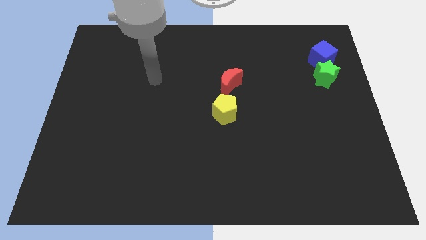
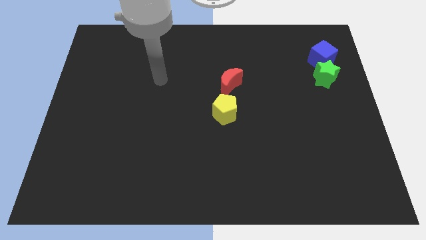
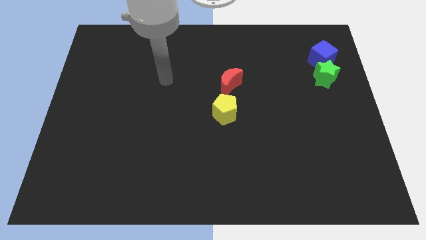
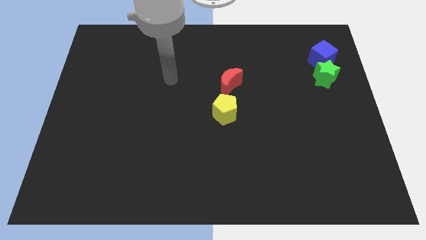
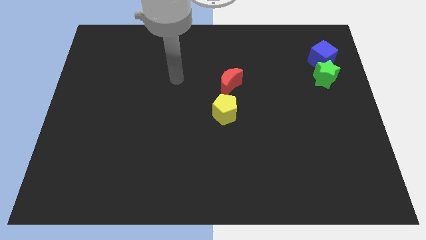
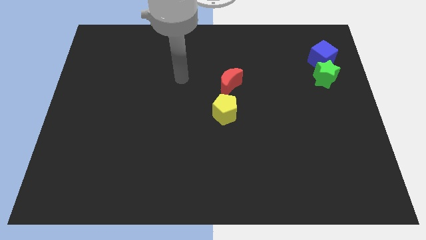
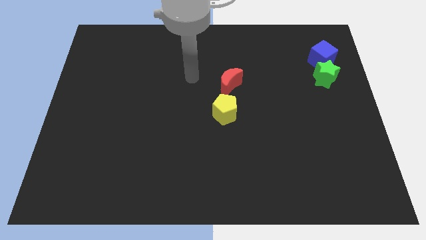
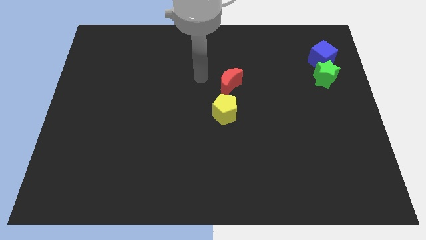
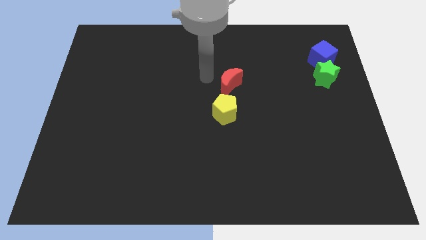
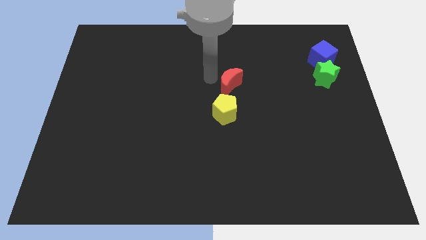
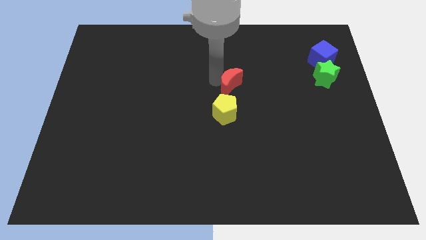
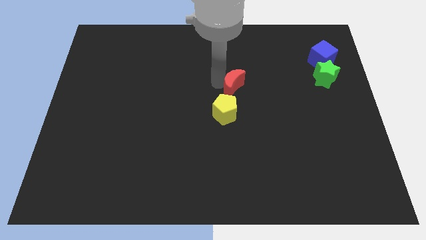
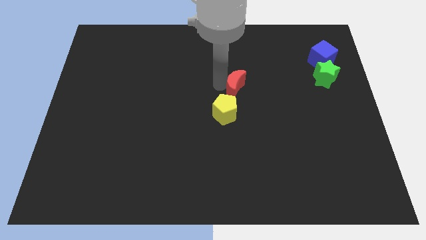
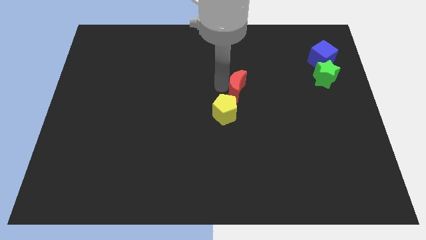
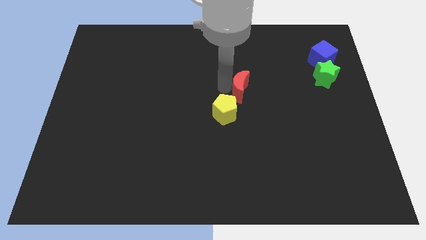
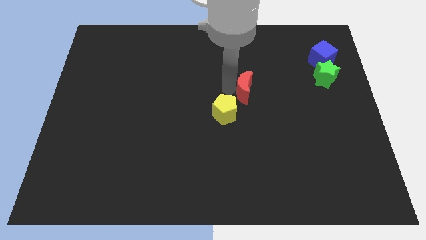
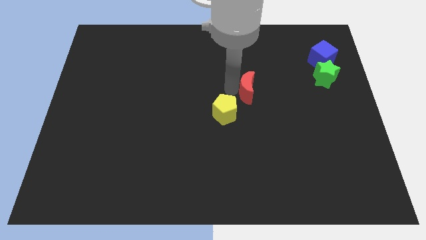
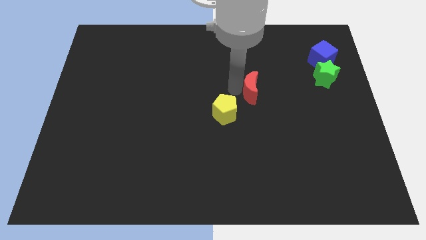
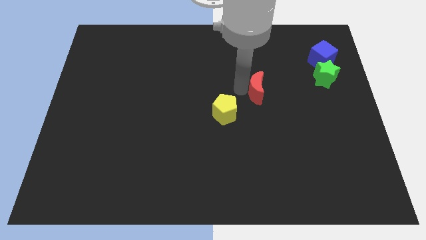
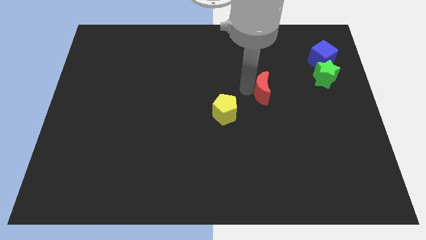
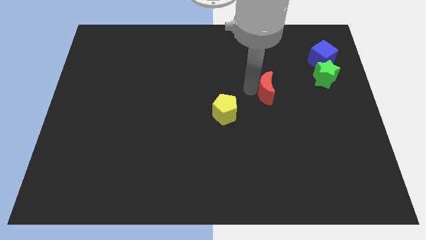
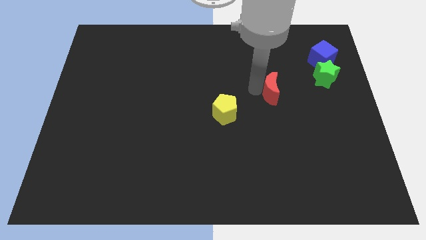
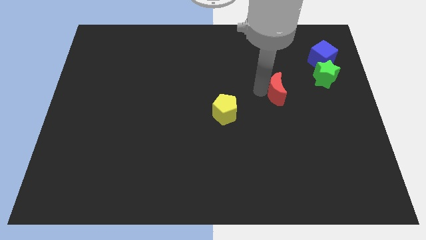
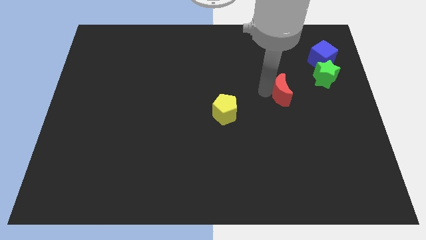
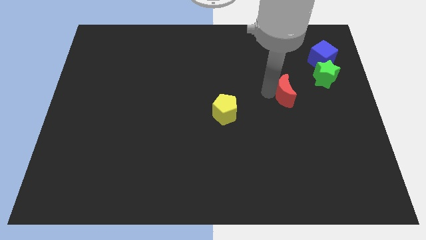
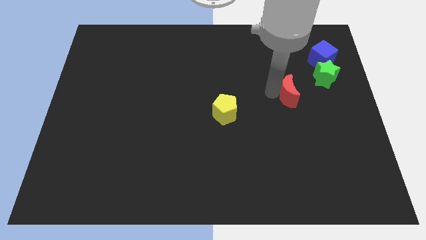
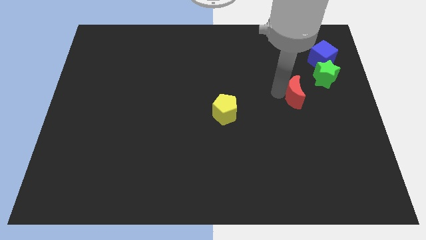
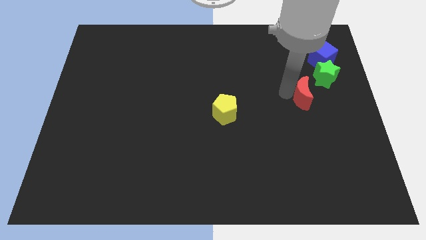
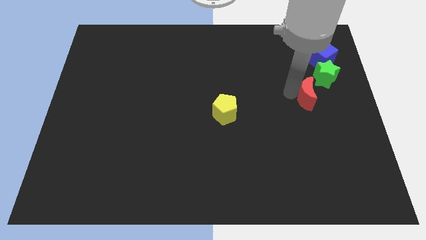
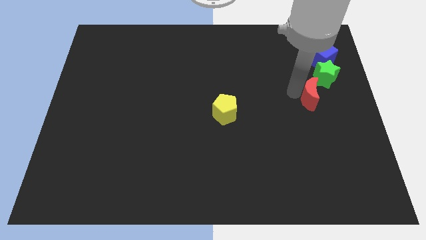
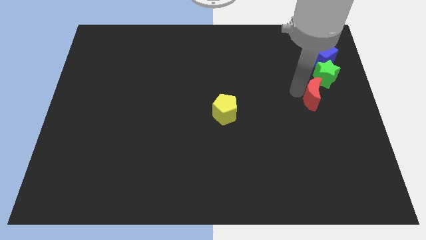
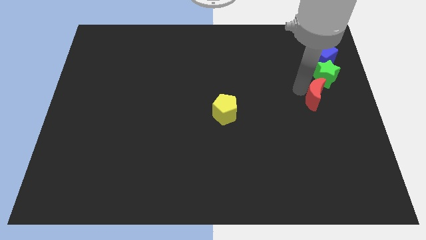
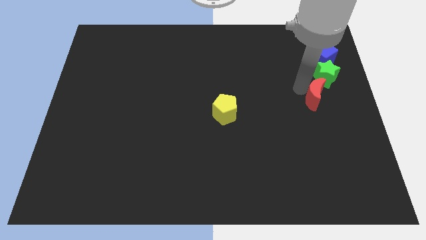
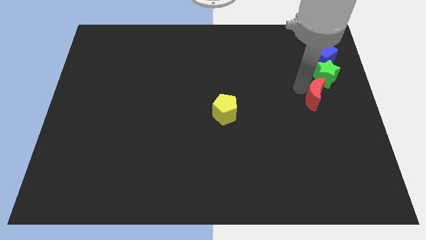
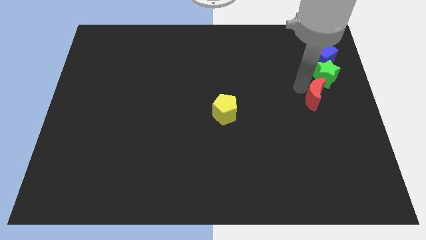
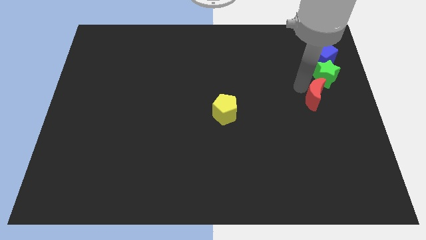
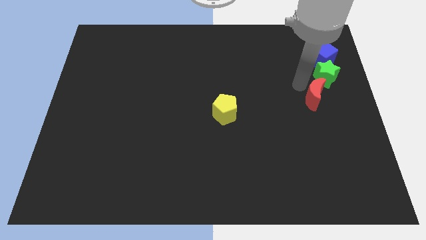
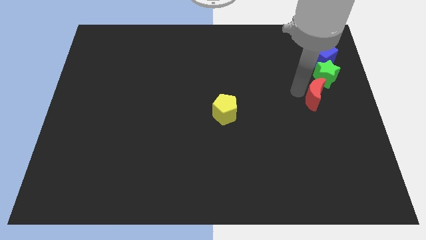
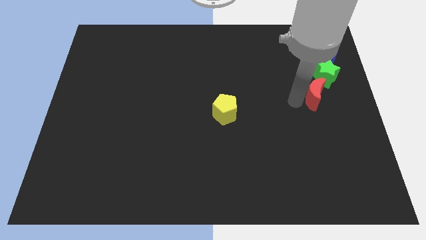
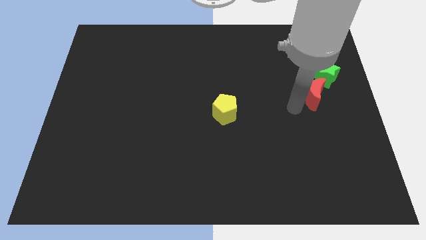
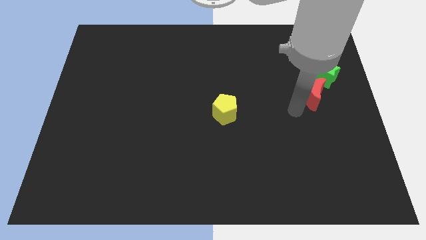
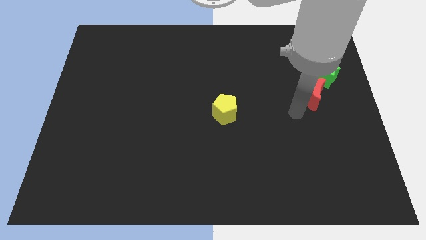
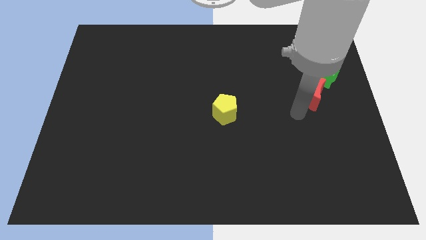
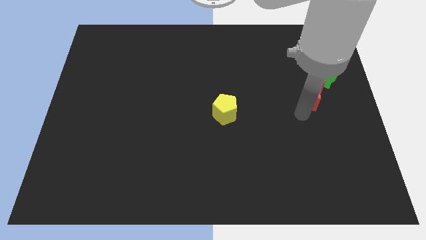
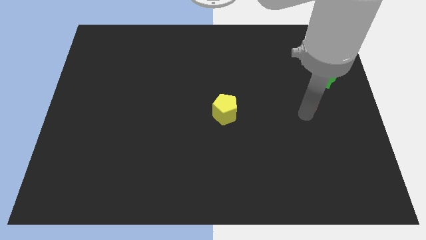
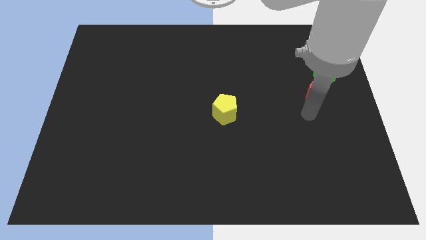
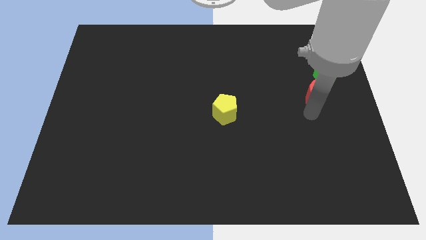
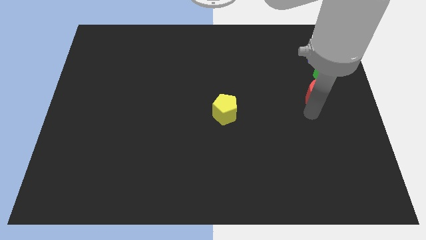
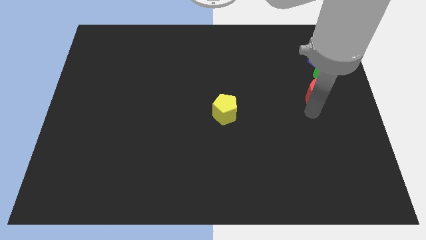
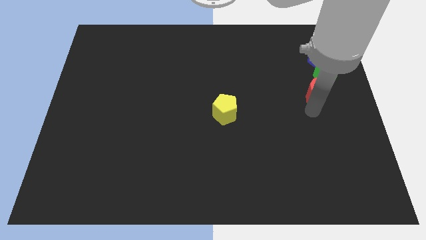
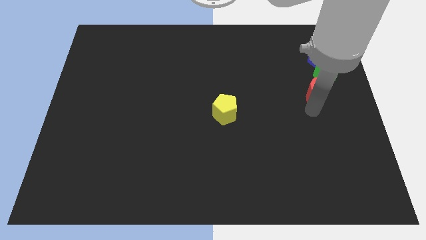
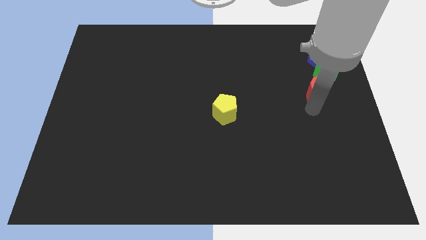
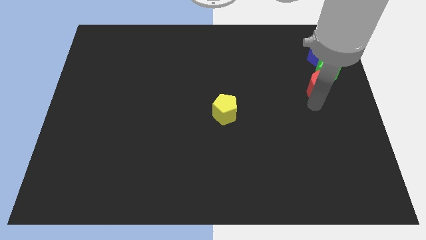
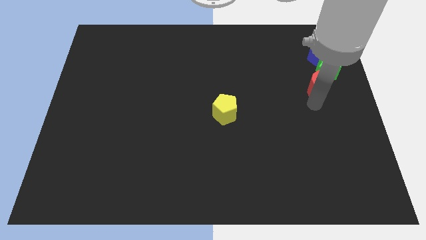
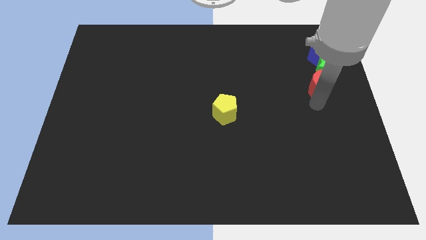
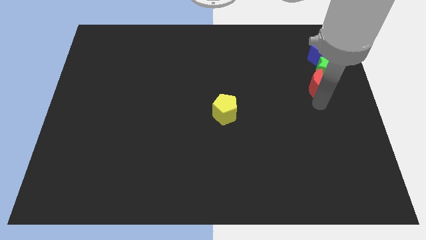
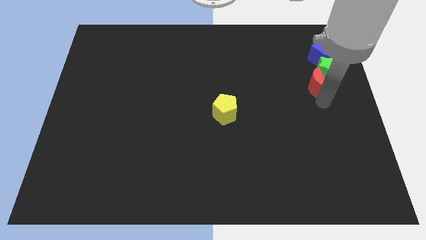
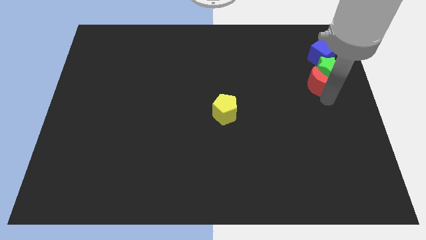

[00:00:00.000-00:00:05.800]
push the red moon close to the green star

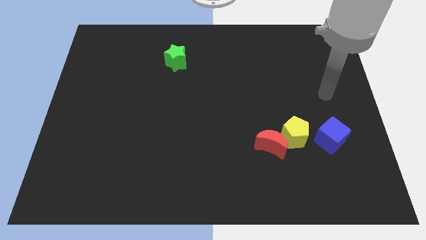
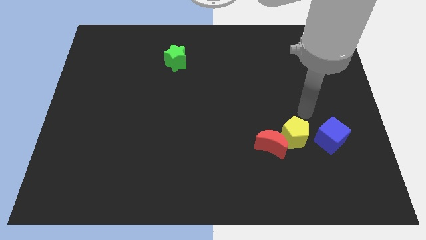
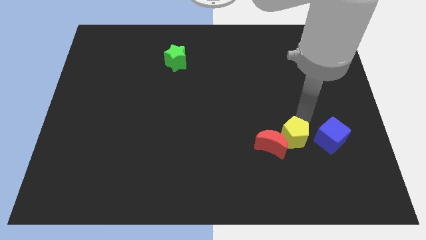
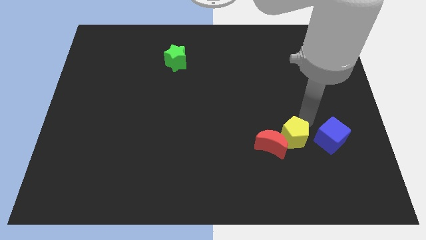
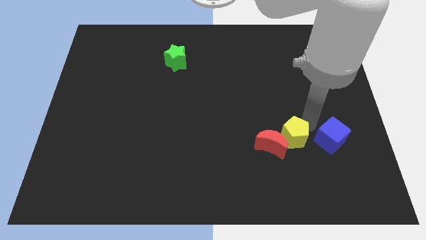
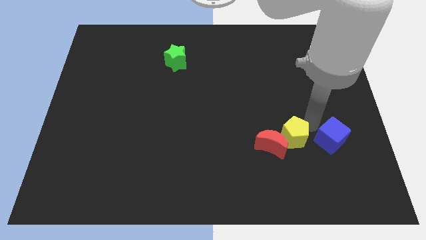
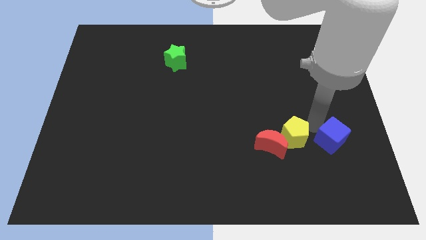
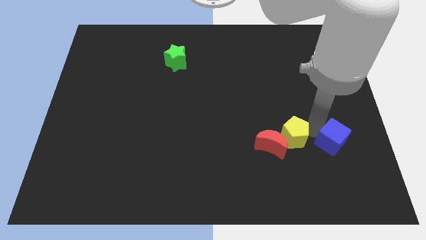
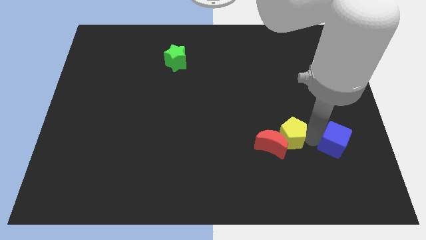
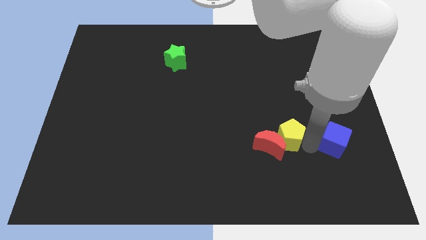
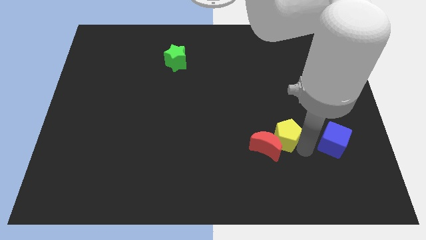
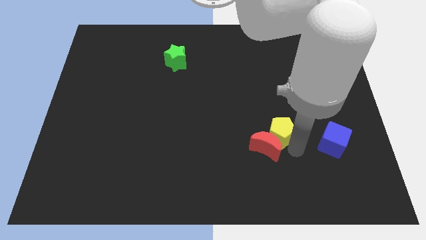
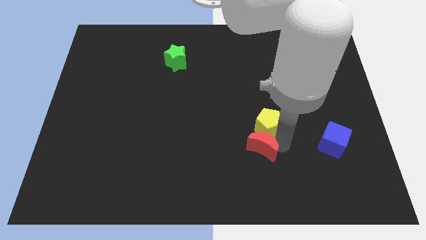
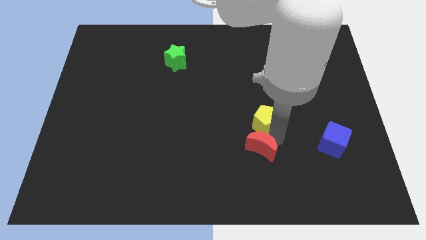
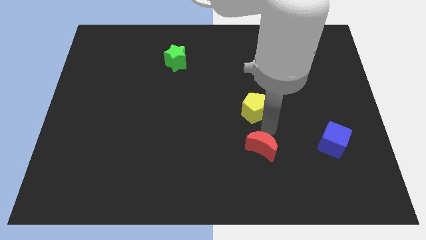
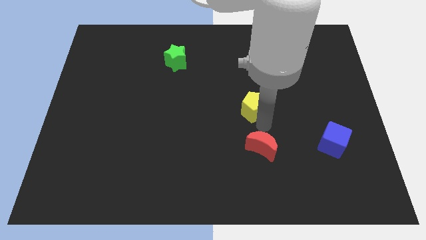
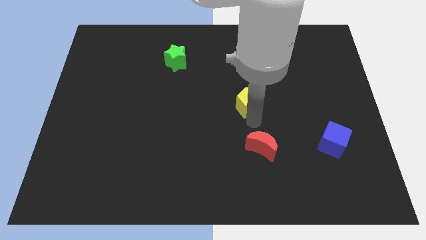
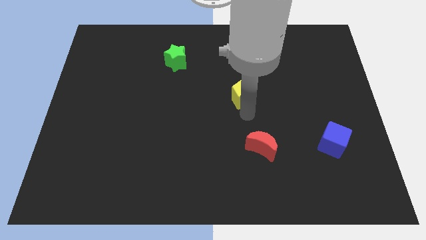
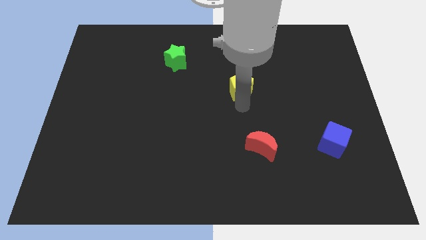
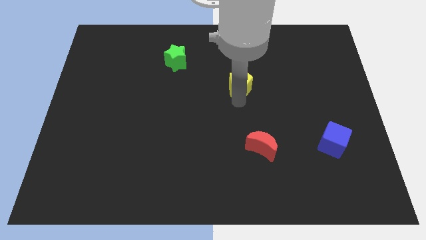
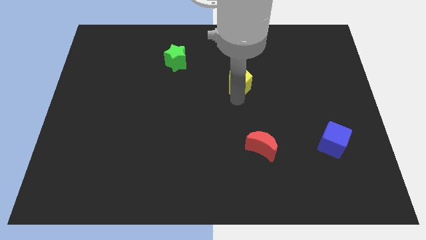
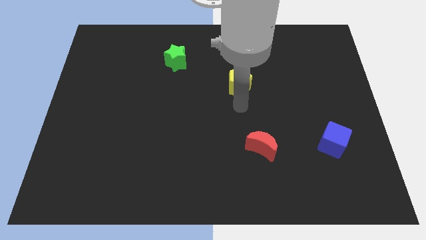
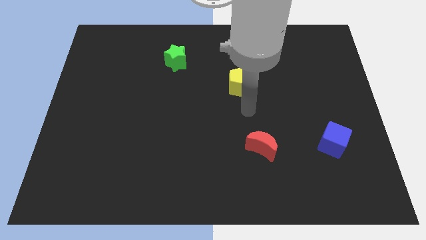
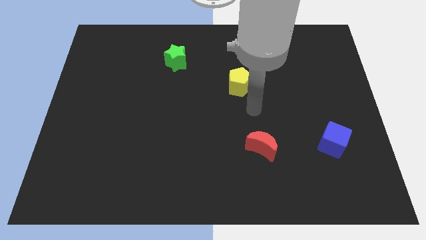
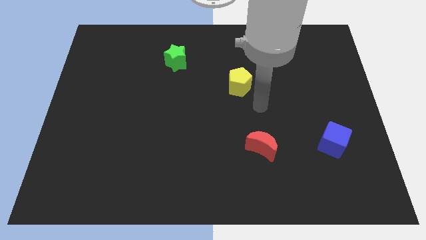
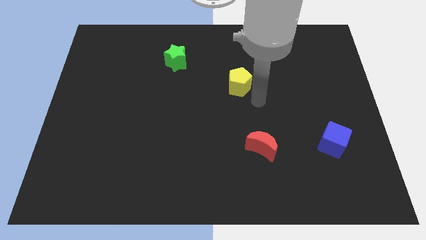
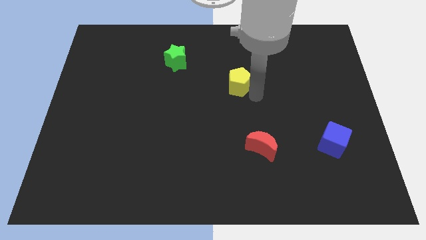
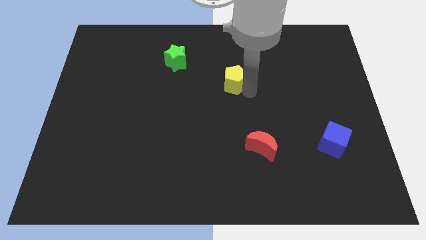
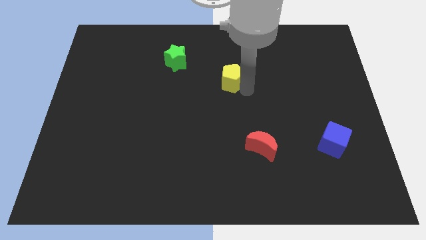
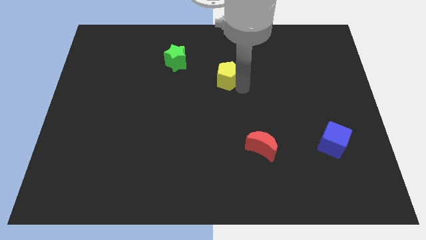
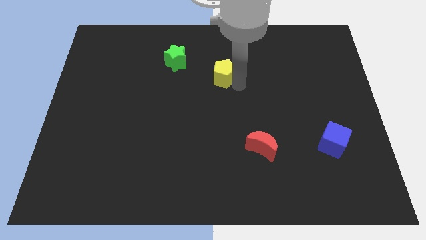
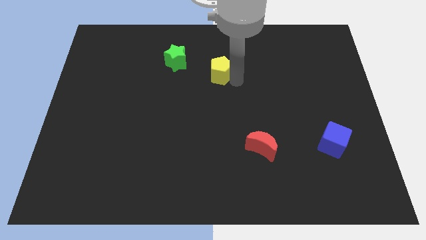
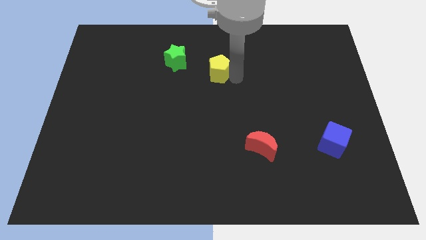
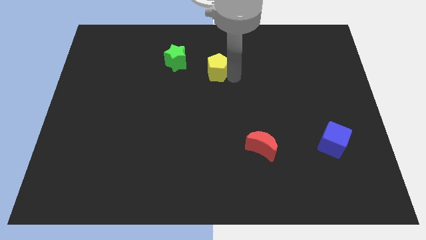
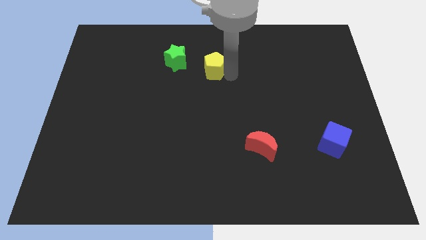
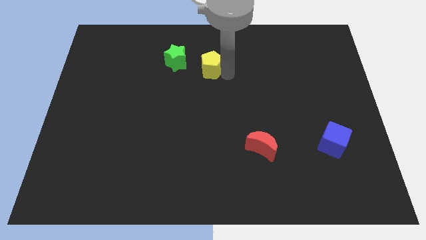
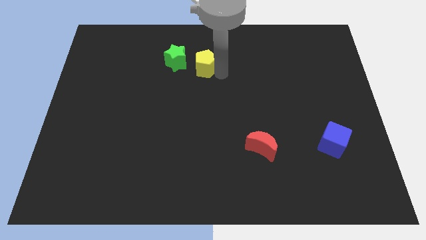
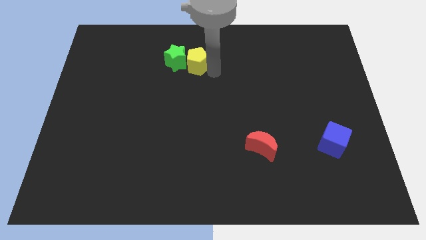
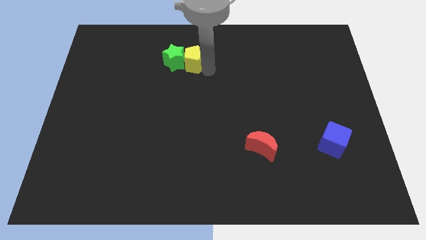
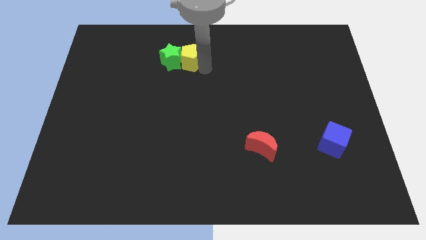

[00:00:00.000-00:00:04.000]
push the yellow block towards the green star
